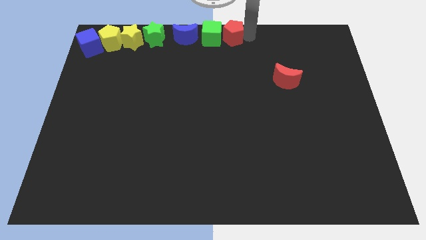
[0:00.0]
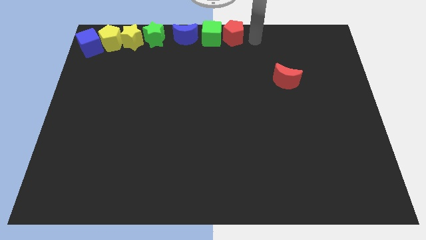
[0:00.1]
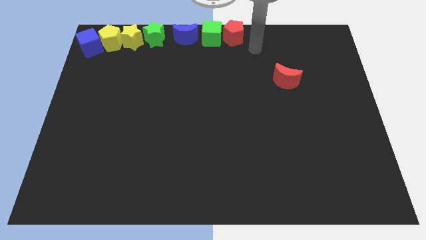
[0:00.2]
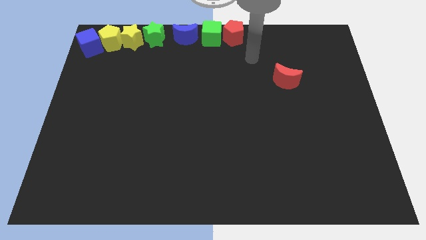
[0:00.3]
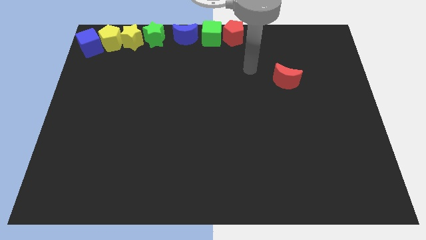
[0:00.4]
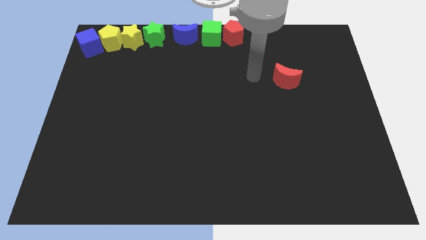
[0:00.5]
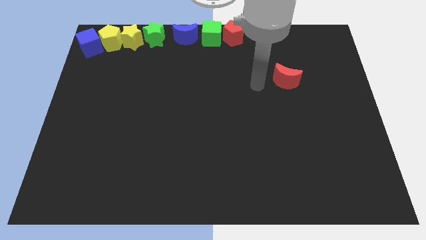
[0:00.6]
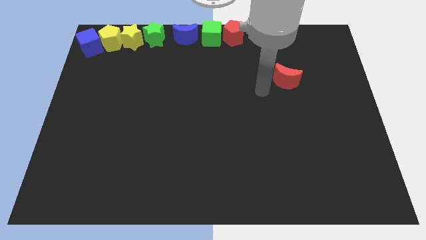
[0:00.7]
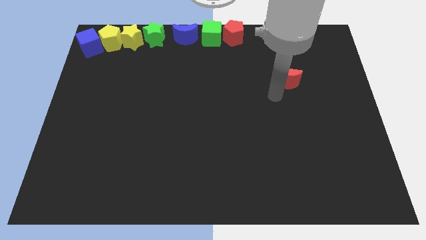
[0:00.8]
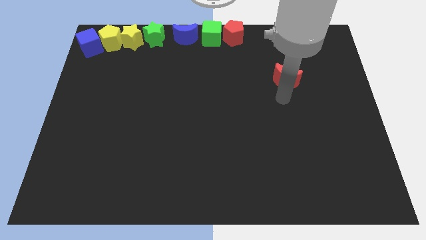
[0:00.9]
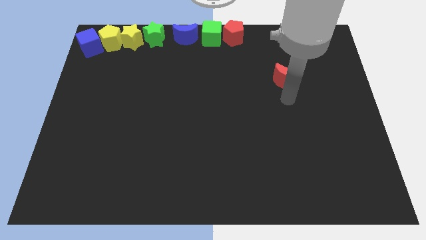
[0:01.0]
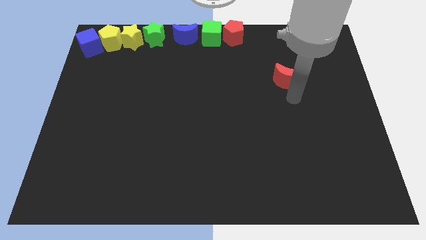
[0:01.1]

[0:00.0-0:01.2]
move the arm away from the red pentagon

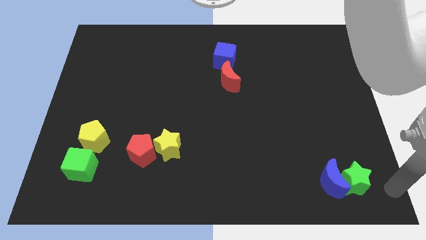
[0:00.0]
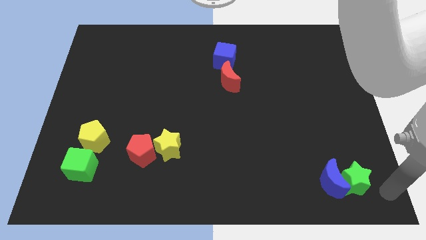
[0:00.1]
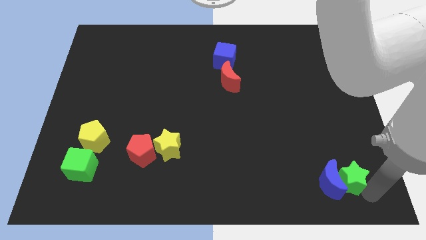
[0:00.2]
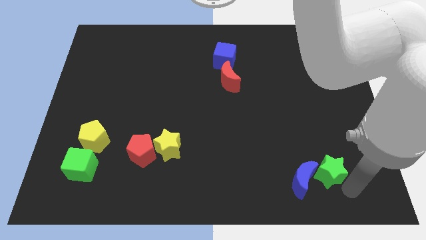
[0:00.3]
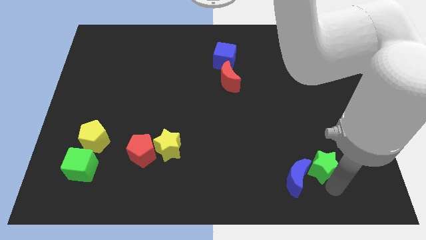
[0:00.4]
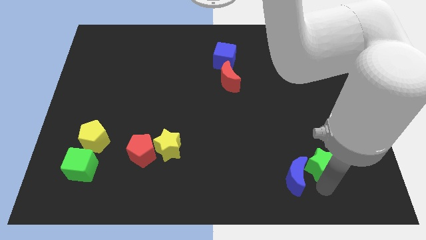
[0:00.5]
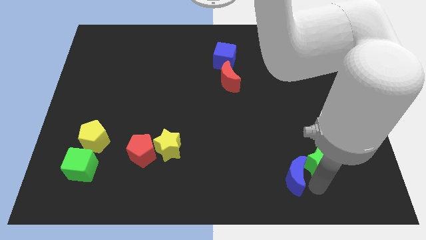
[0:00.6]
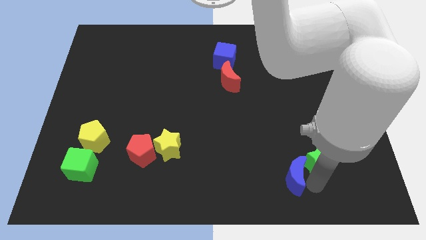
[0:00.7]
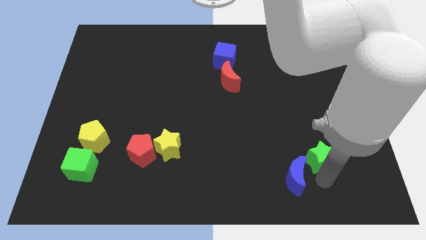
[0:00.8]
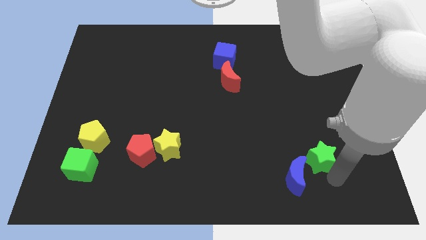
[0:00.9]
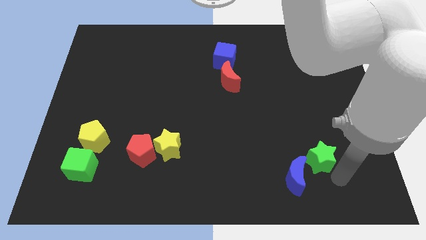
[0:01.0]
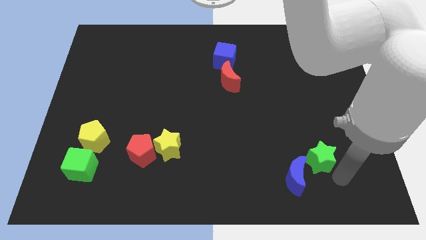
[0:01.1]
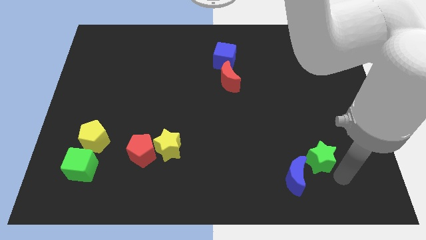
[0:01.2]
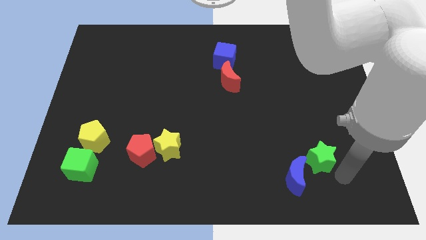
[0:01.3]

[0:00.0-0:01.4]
push the green star into the blue crescent

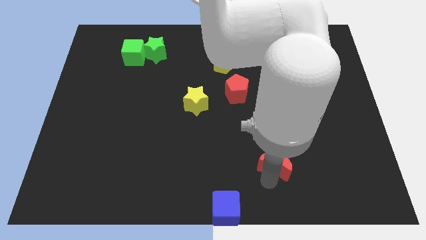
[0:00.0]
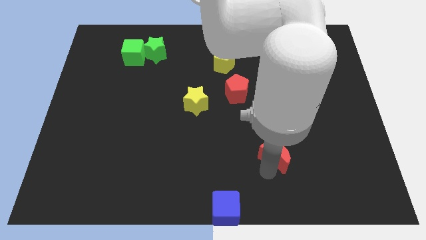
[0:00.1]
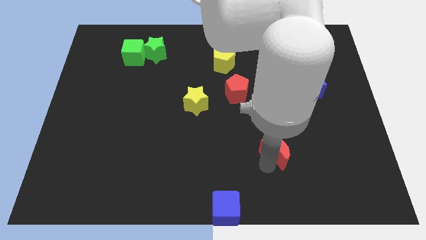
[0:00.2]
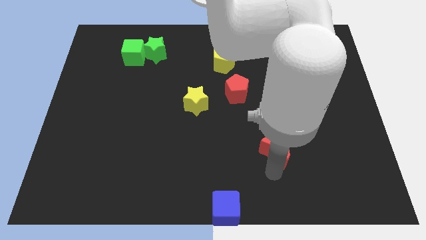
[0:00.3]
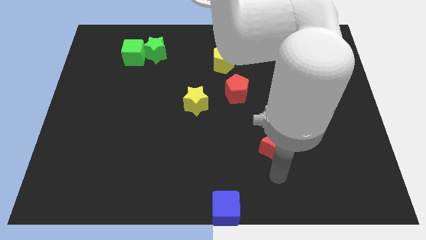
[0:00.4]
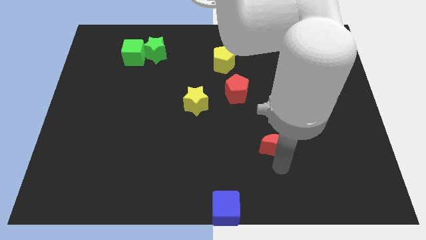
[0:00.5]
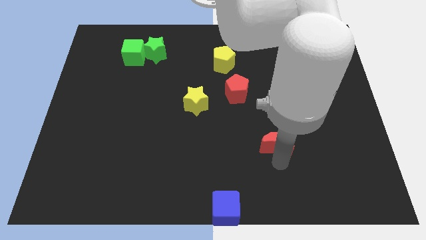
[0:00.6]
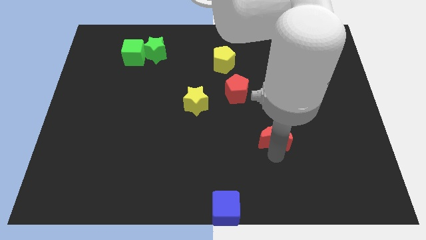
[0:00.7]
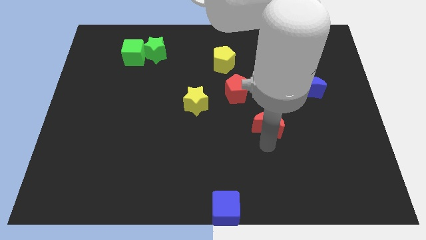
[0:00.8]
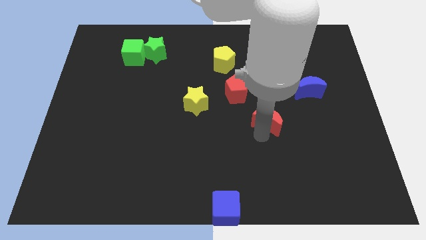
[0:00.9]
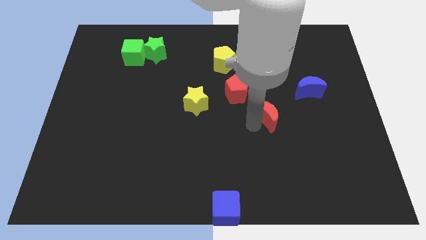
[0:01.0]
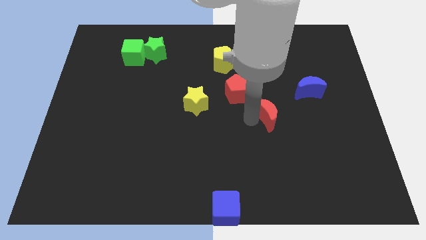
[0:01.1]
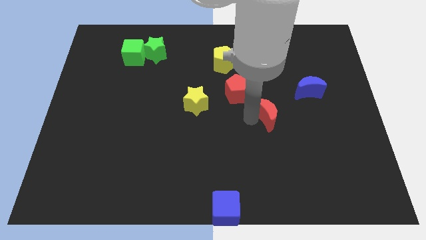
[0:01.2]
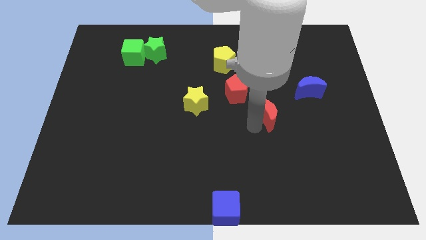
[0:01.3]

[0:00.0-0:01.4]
place red crescent slightly towards up

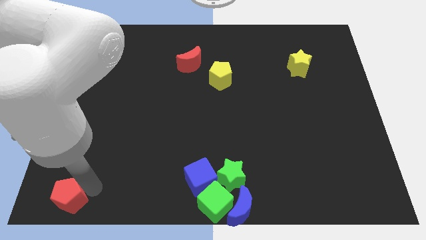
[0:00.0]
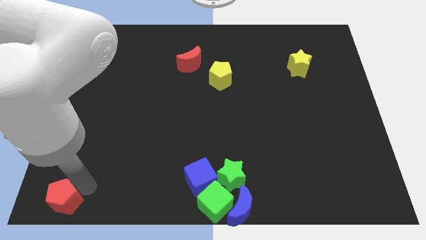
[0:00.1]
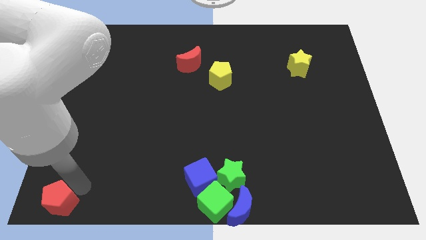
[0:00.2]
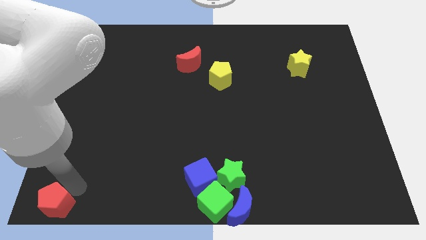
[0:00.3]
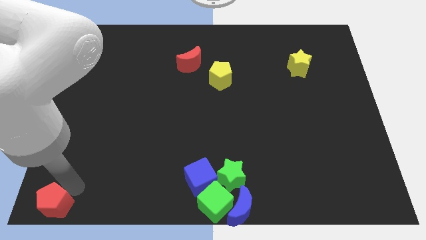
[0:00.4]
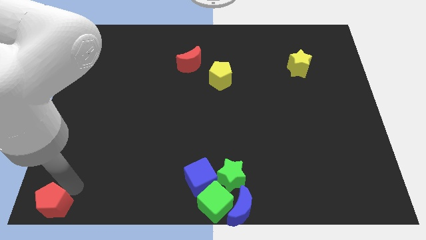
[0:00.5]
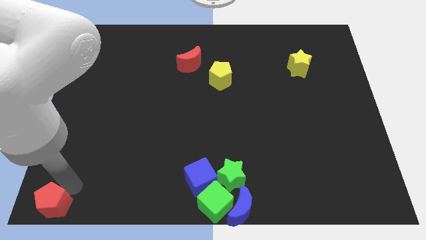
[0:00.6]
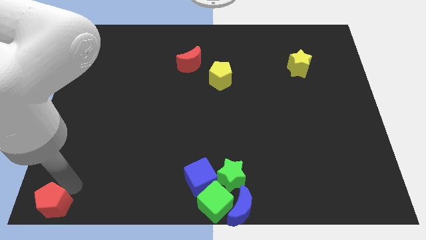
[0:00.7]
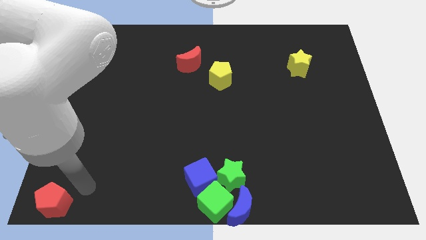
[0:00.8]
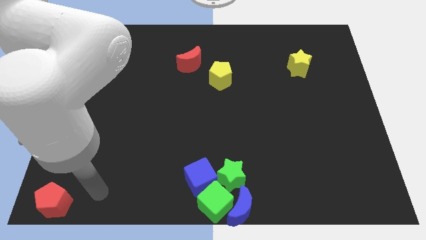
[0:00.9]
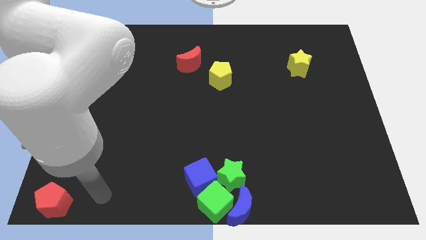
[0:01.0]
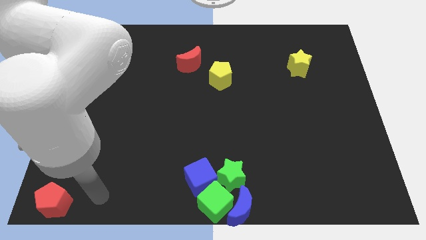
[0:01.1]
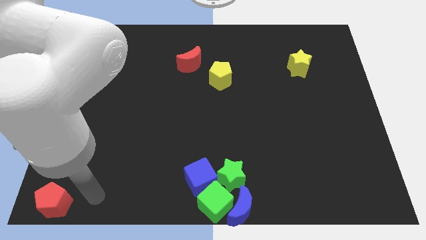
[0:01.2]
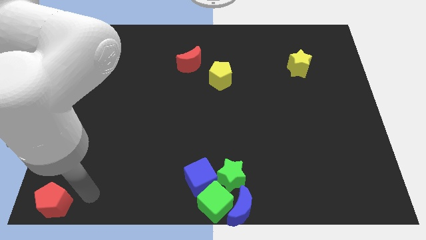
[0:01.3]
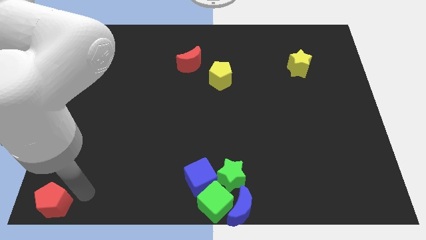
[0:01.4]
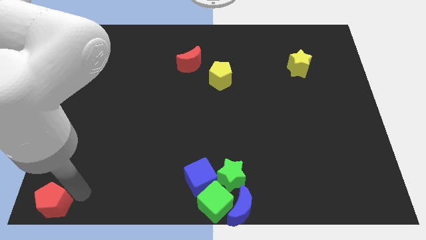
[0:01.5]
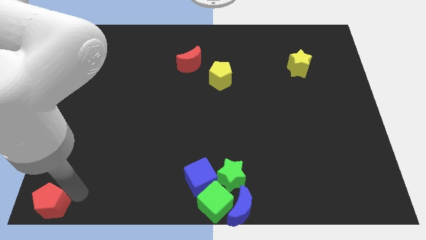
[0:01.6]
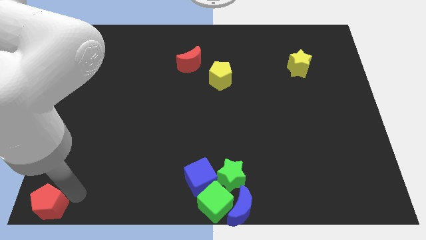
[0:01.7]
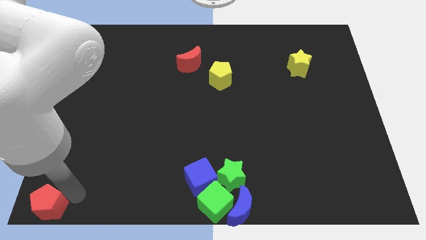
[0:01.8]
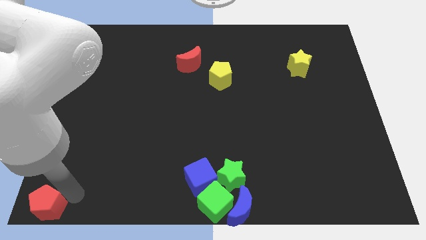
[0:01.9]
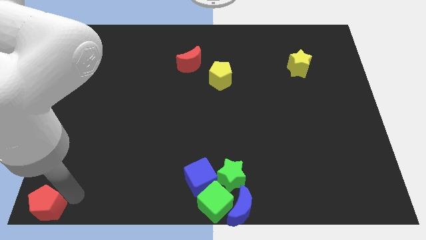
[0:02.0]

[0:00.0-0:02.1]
push the red pentagon towards the bottom left corner of the board

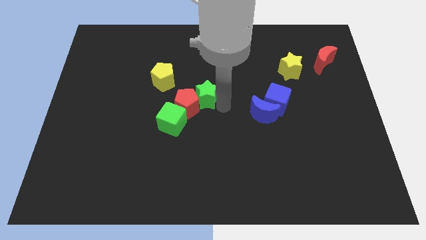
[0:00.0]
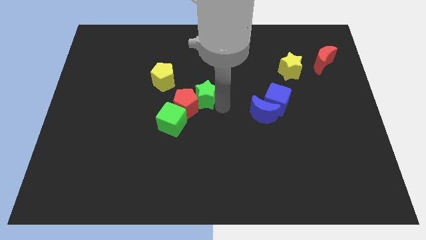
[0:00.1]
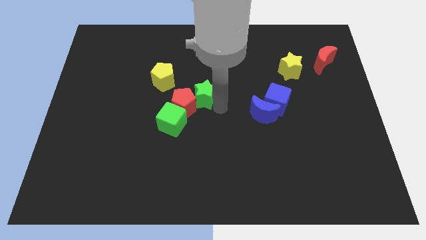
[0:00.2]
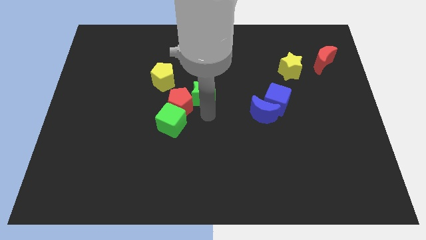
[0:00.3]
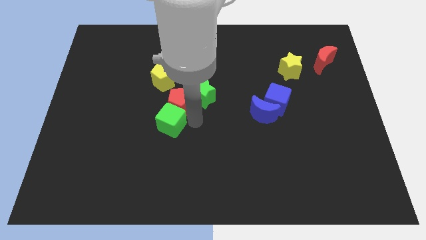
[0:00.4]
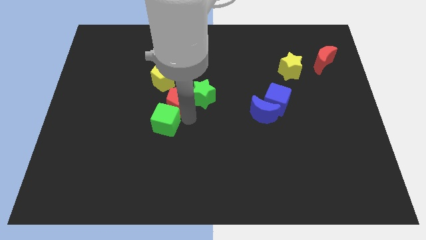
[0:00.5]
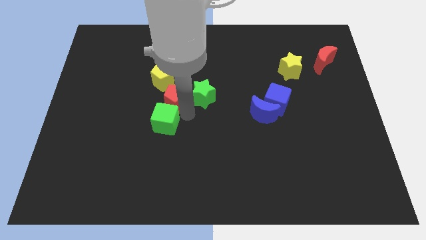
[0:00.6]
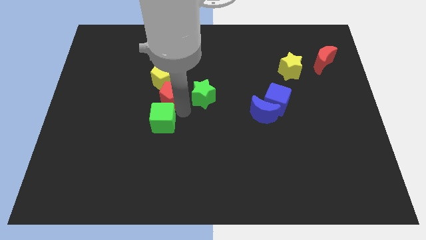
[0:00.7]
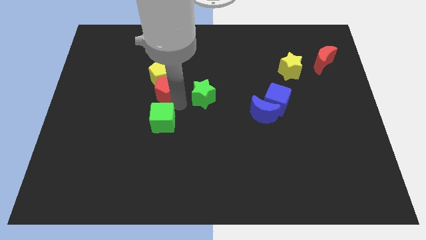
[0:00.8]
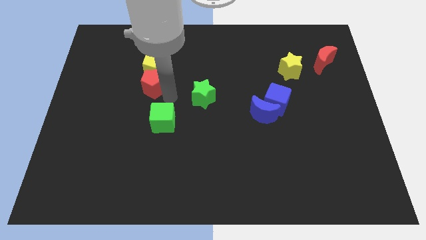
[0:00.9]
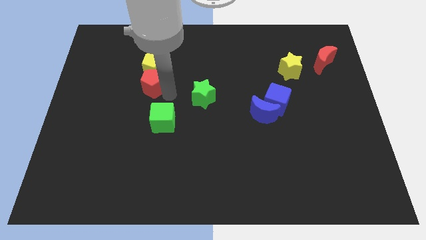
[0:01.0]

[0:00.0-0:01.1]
put the red pentagon and yellow pentagon together

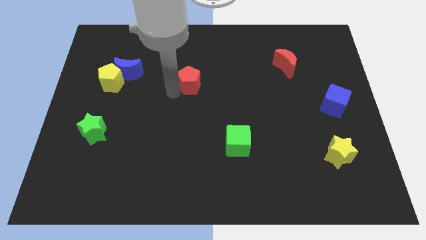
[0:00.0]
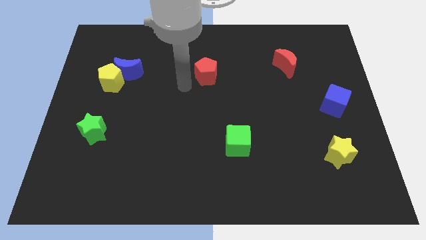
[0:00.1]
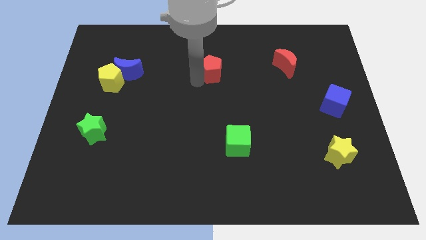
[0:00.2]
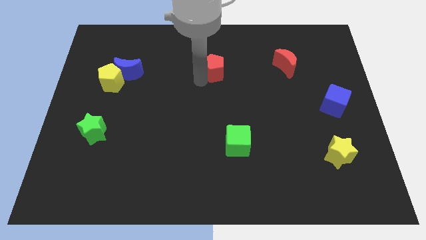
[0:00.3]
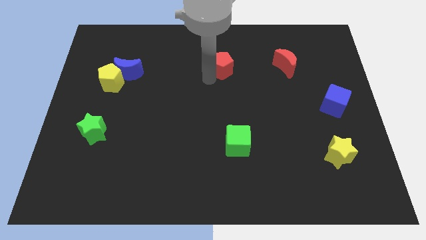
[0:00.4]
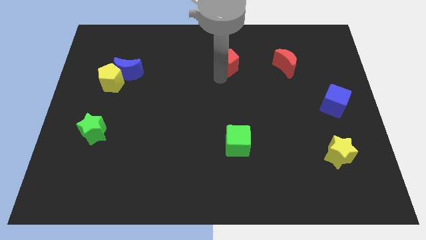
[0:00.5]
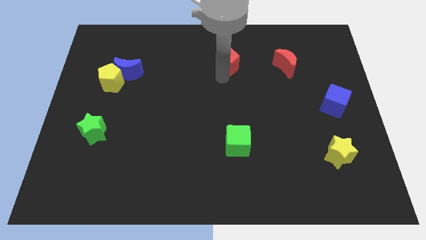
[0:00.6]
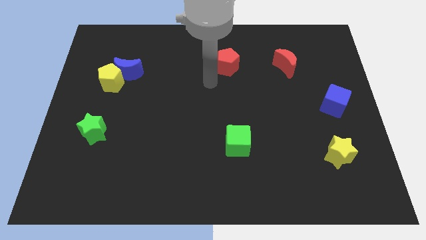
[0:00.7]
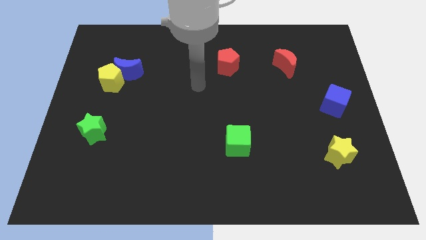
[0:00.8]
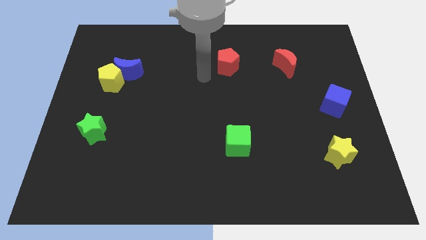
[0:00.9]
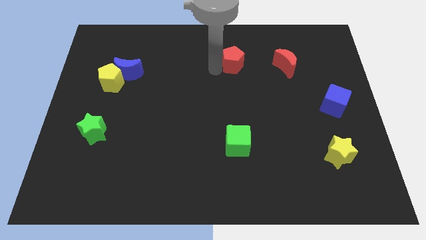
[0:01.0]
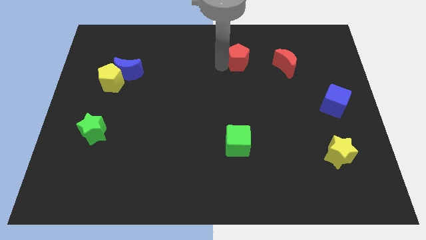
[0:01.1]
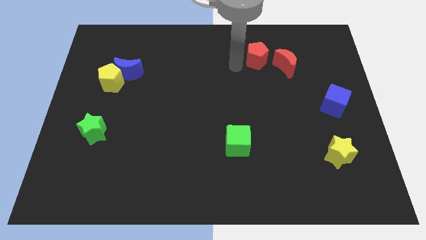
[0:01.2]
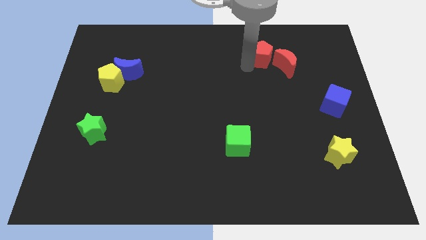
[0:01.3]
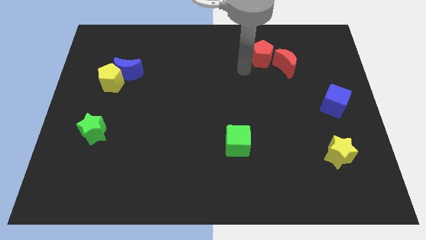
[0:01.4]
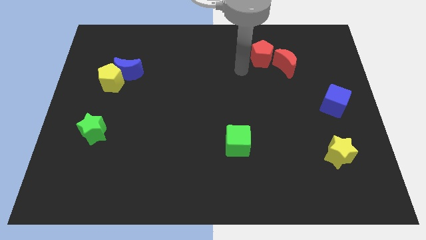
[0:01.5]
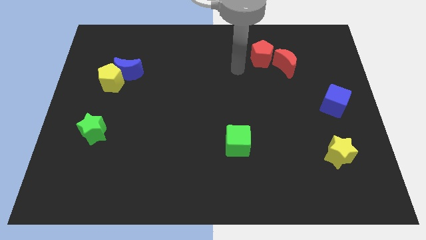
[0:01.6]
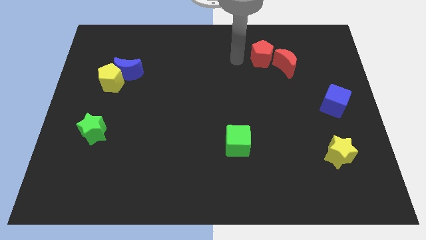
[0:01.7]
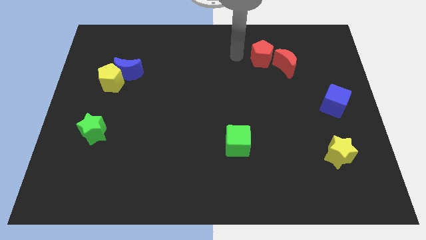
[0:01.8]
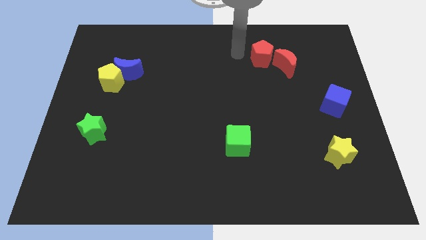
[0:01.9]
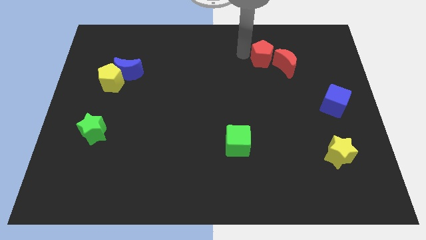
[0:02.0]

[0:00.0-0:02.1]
push the red pentagon into the red crescent
